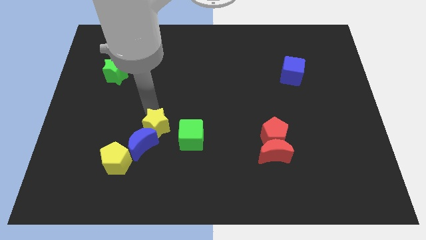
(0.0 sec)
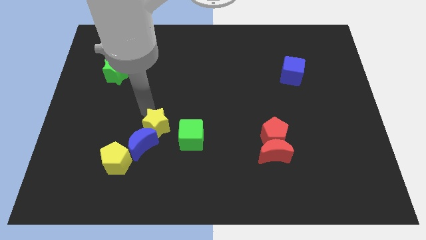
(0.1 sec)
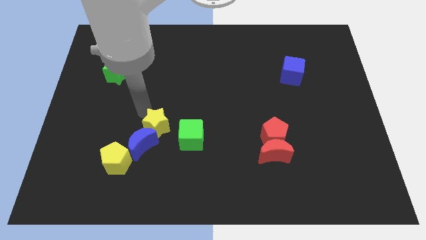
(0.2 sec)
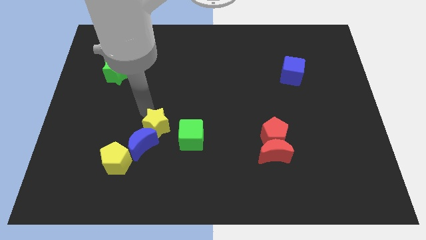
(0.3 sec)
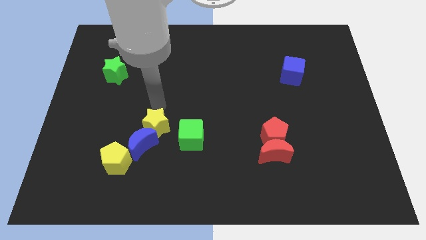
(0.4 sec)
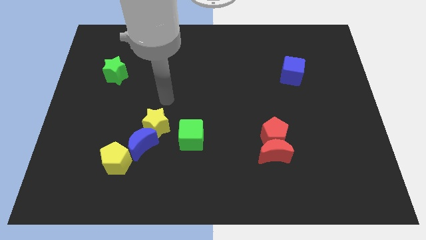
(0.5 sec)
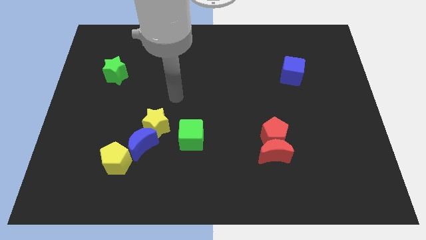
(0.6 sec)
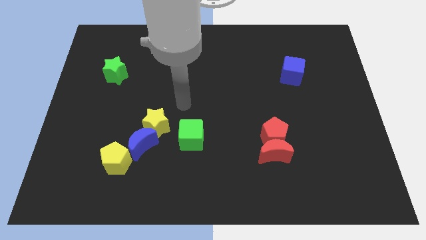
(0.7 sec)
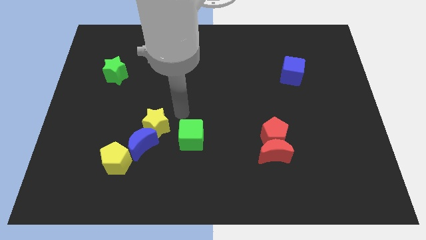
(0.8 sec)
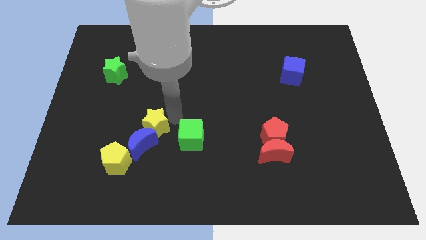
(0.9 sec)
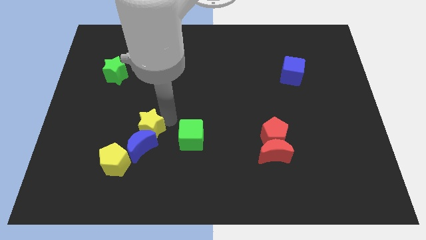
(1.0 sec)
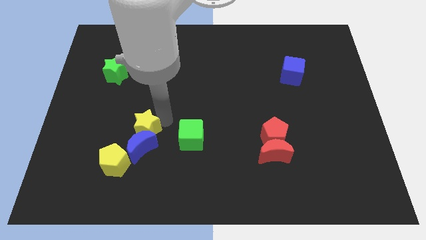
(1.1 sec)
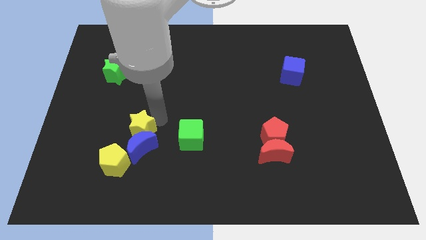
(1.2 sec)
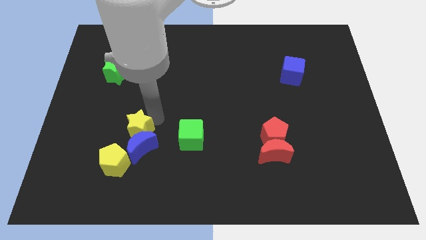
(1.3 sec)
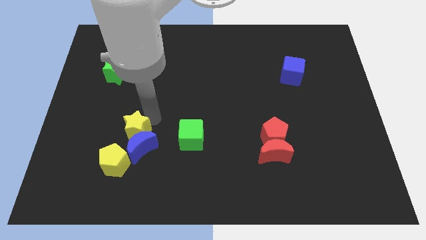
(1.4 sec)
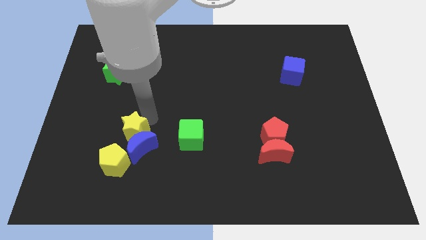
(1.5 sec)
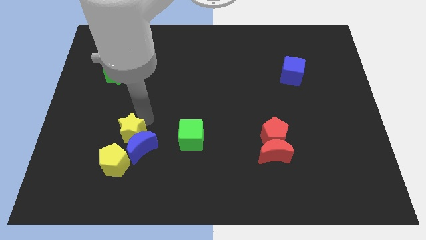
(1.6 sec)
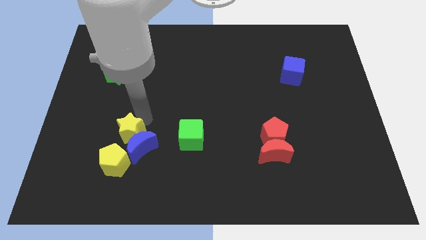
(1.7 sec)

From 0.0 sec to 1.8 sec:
place the yellow star at the top of the blue crescent

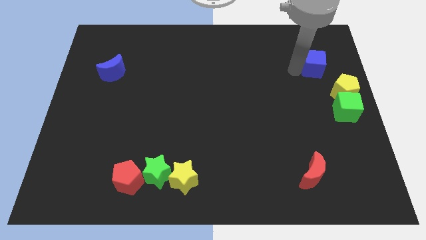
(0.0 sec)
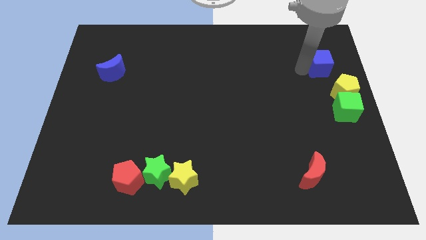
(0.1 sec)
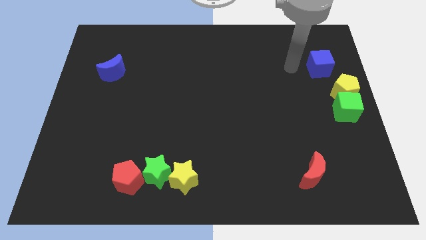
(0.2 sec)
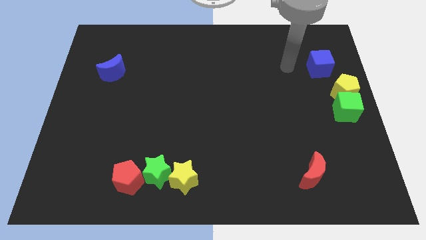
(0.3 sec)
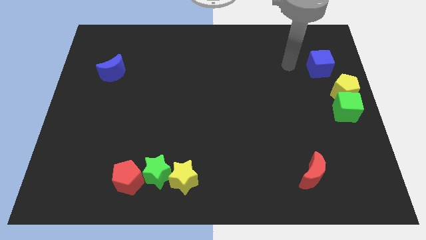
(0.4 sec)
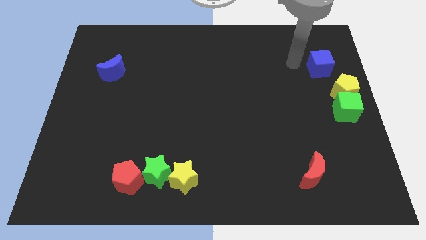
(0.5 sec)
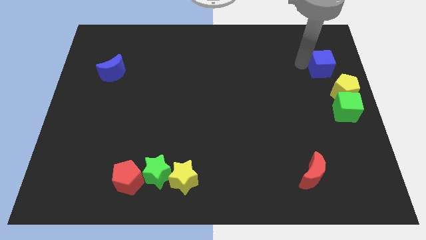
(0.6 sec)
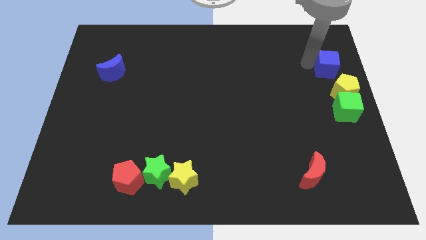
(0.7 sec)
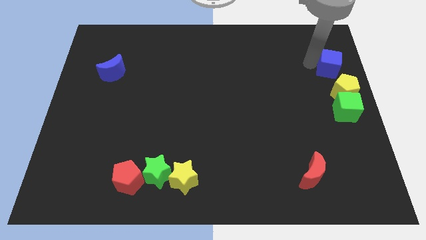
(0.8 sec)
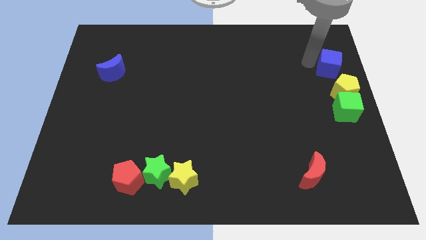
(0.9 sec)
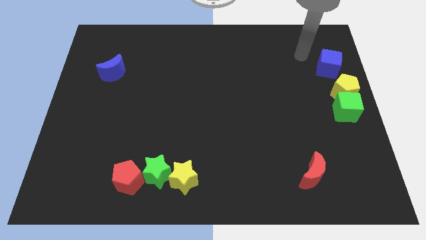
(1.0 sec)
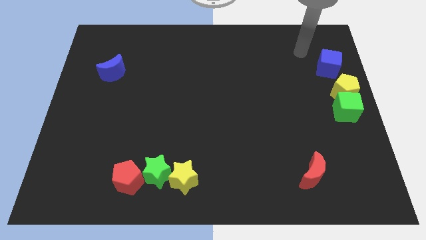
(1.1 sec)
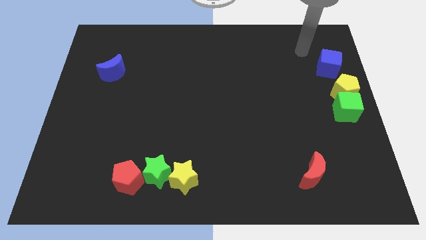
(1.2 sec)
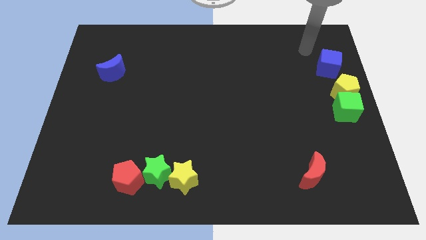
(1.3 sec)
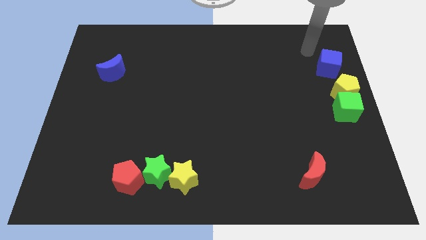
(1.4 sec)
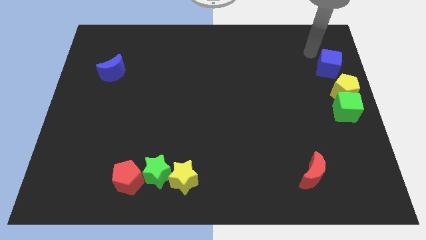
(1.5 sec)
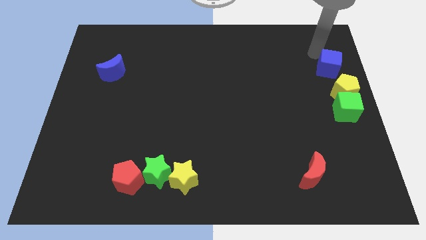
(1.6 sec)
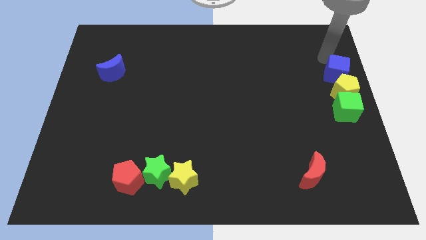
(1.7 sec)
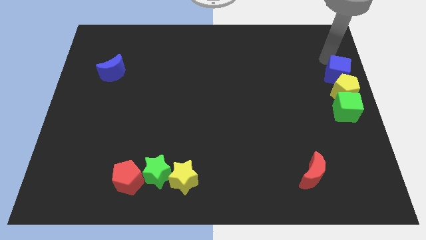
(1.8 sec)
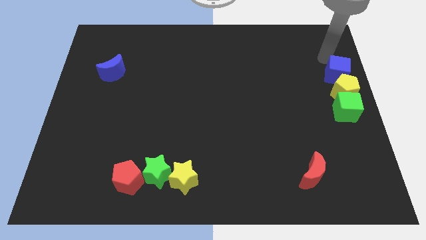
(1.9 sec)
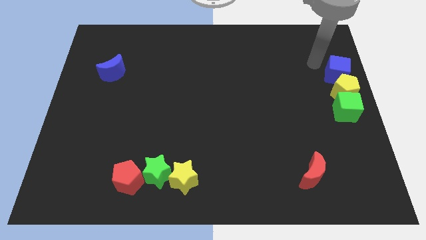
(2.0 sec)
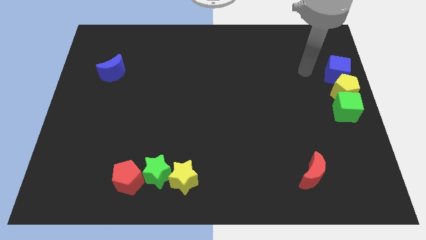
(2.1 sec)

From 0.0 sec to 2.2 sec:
push the blue cube to the top of the yellow pentagon

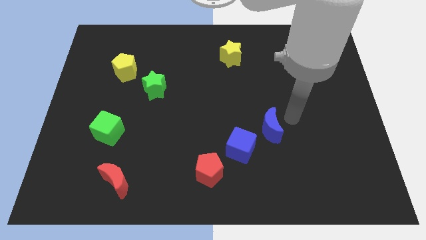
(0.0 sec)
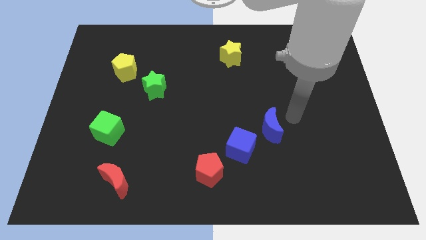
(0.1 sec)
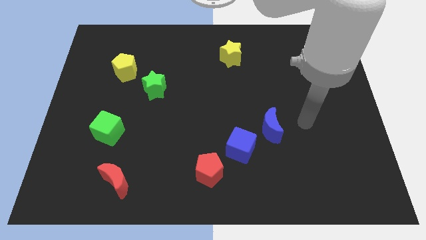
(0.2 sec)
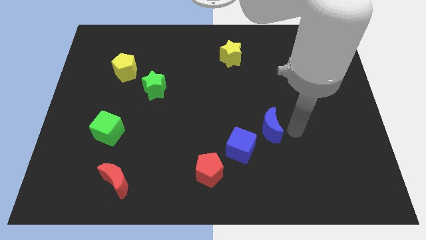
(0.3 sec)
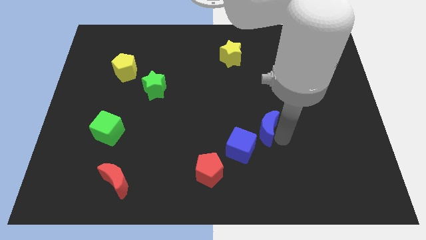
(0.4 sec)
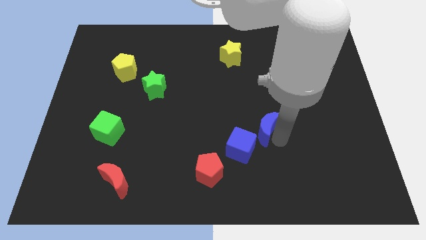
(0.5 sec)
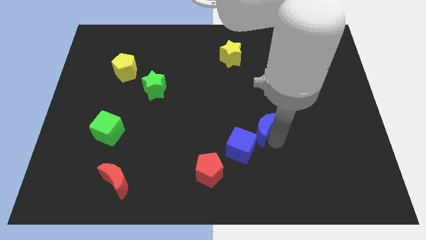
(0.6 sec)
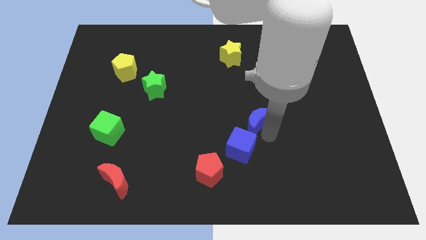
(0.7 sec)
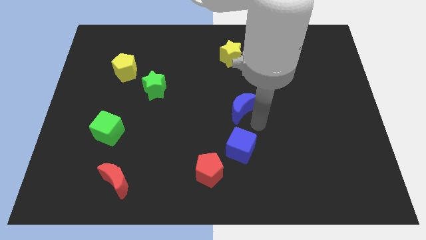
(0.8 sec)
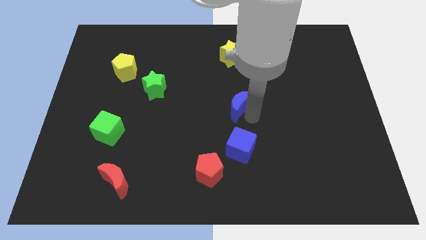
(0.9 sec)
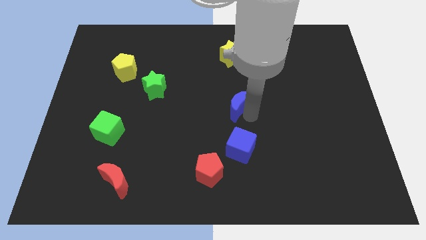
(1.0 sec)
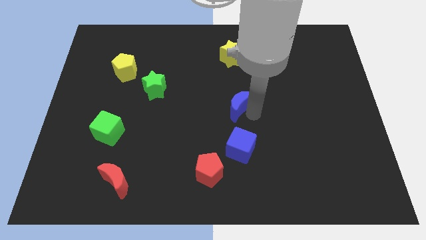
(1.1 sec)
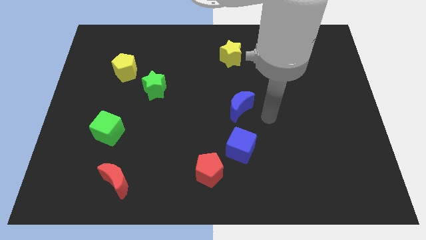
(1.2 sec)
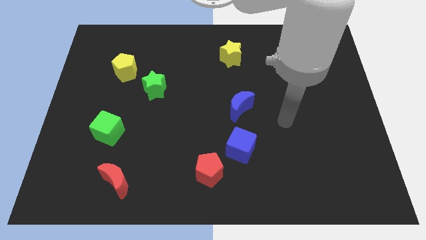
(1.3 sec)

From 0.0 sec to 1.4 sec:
move the blue crescent to the top of the cube

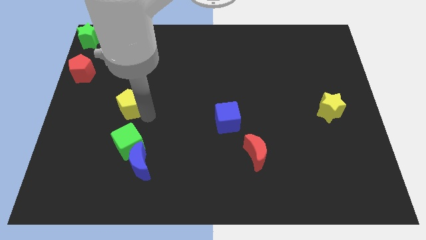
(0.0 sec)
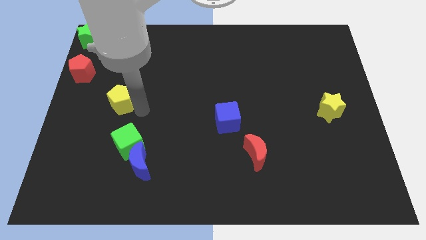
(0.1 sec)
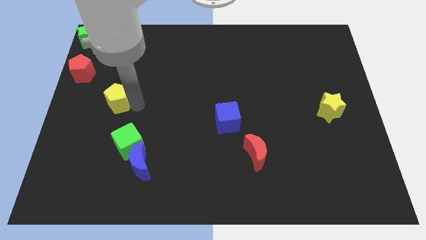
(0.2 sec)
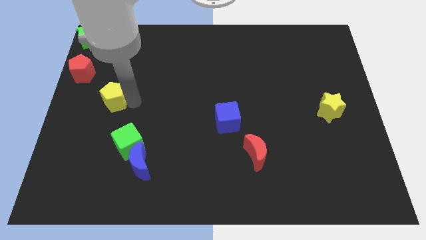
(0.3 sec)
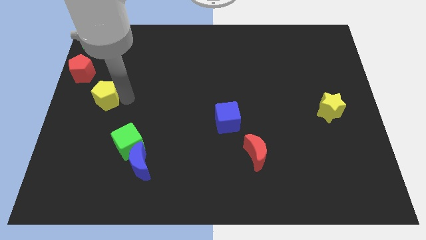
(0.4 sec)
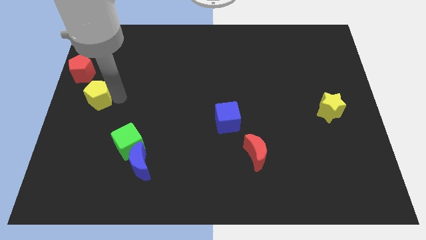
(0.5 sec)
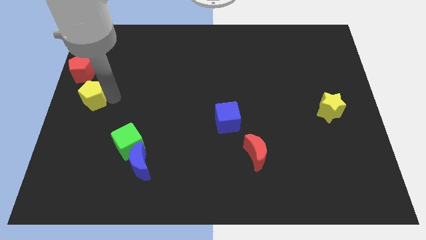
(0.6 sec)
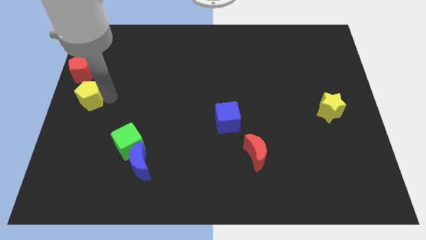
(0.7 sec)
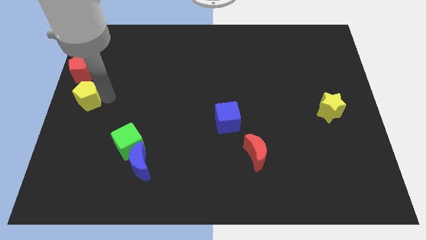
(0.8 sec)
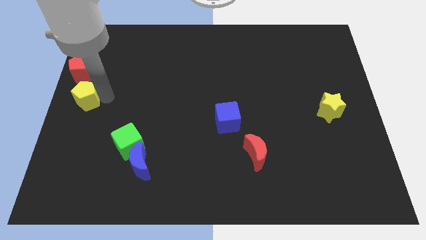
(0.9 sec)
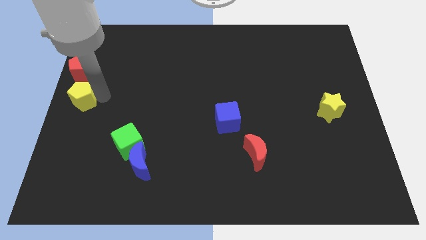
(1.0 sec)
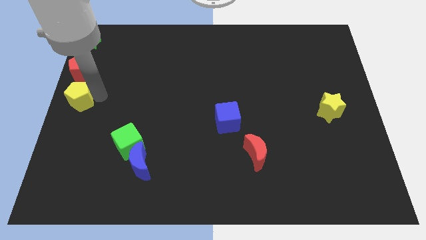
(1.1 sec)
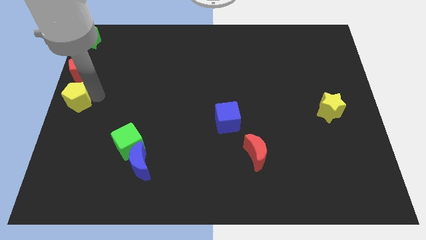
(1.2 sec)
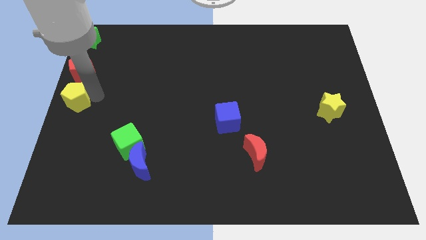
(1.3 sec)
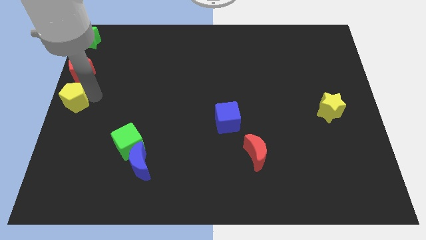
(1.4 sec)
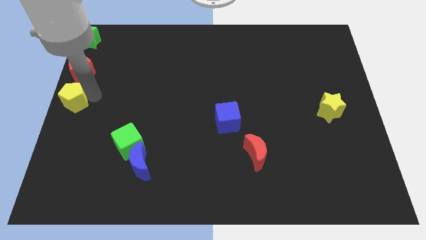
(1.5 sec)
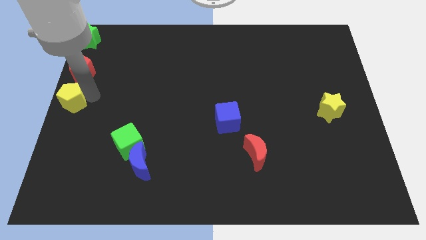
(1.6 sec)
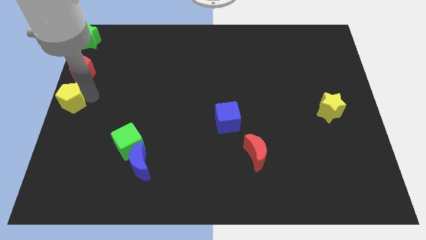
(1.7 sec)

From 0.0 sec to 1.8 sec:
put the yellow pentagon below the red pentagon

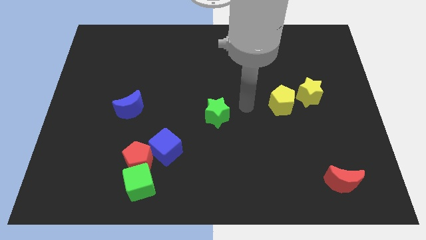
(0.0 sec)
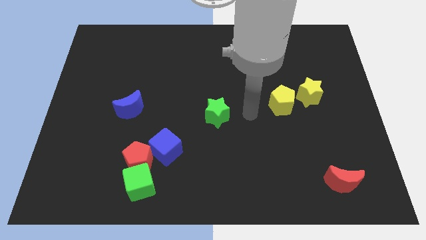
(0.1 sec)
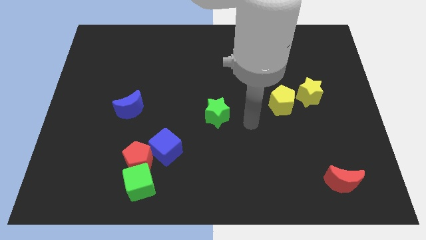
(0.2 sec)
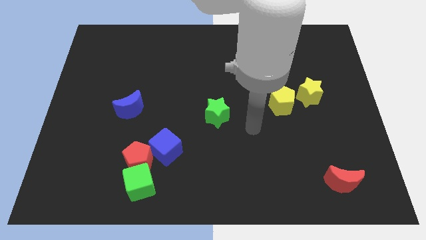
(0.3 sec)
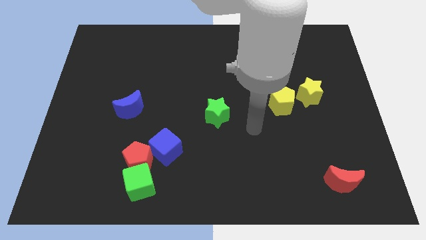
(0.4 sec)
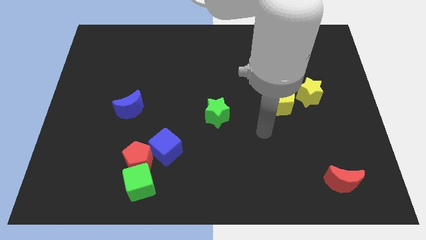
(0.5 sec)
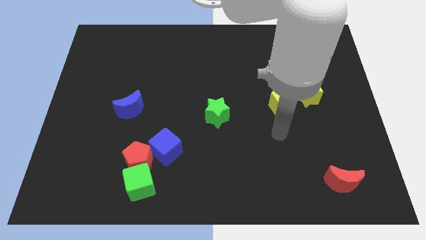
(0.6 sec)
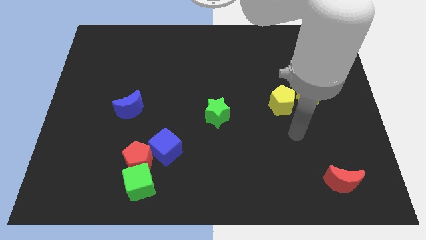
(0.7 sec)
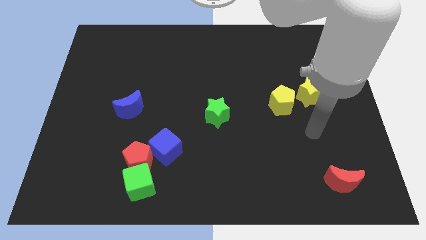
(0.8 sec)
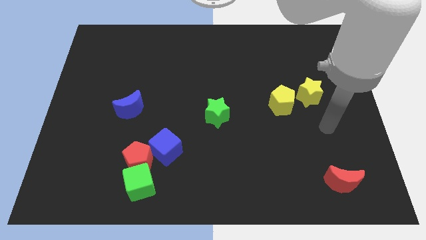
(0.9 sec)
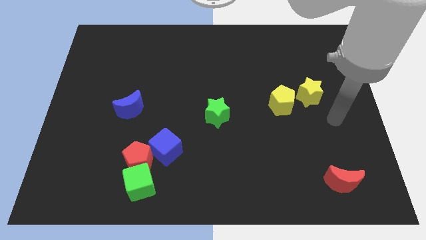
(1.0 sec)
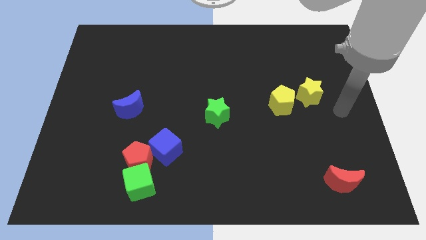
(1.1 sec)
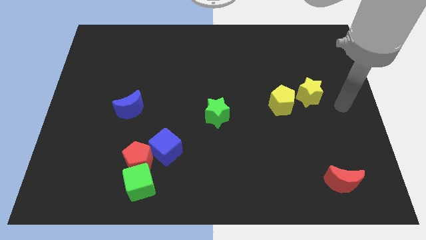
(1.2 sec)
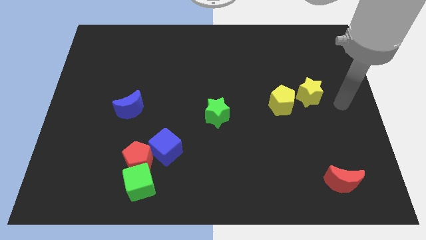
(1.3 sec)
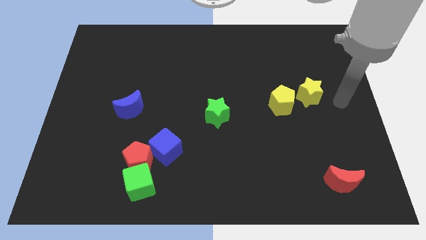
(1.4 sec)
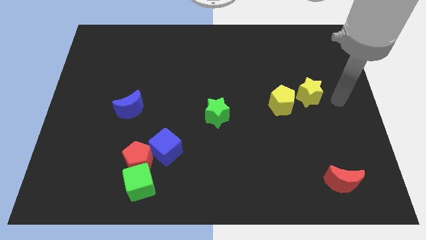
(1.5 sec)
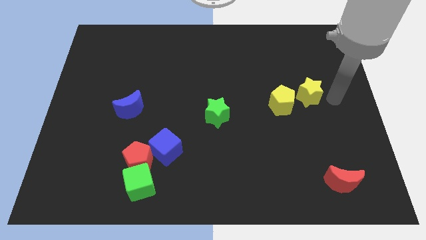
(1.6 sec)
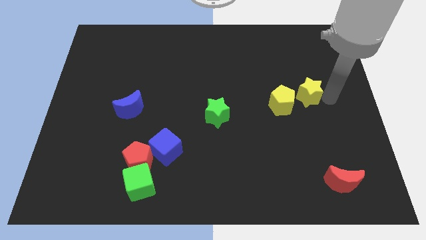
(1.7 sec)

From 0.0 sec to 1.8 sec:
move the arm towards the yellow star
